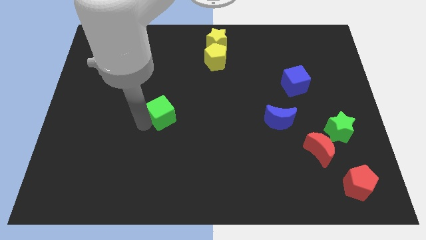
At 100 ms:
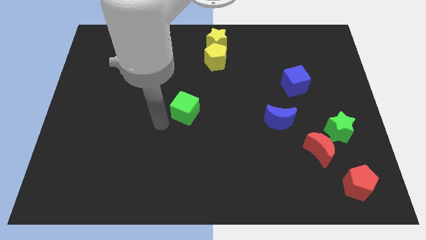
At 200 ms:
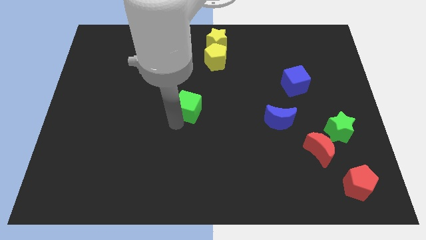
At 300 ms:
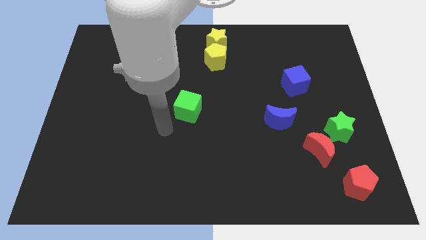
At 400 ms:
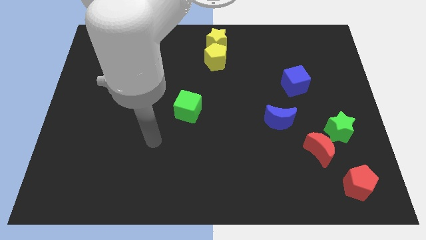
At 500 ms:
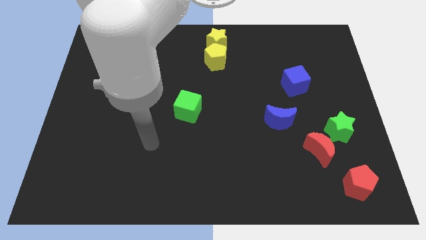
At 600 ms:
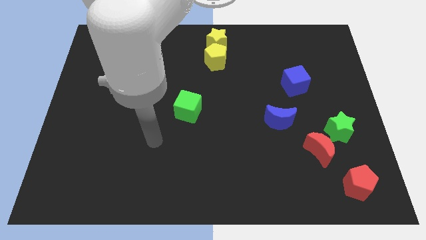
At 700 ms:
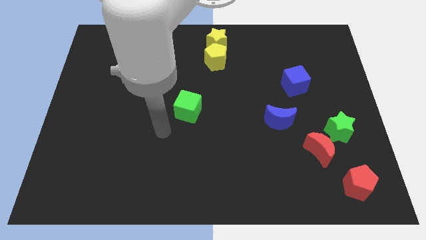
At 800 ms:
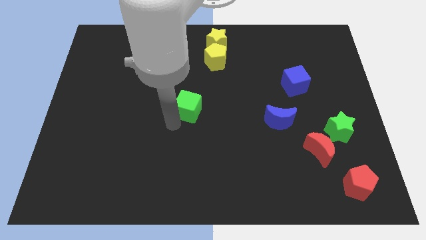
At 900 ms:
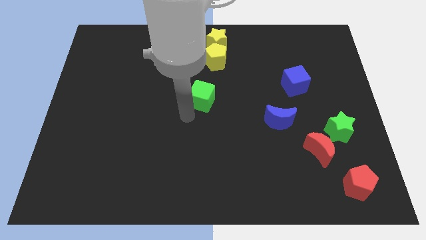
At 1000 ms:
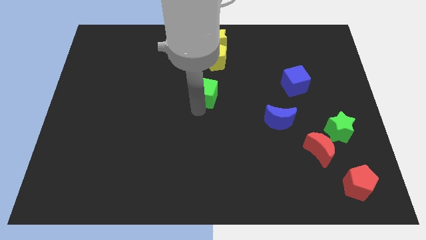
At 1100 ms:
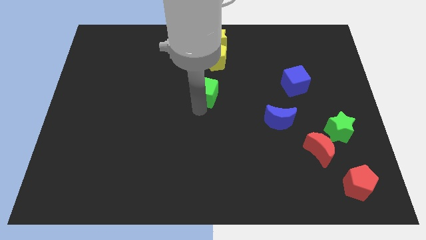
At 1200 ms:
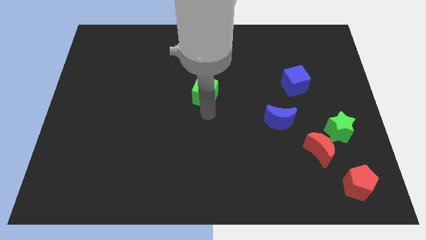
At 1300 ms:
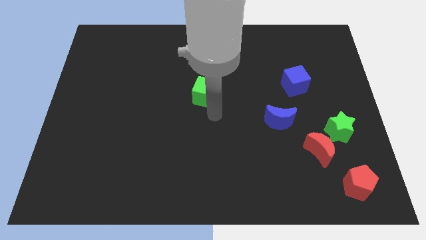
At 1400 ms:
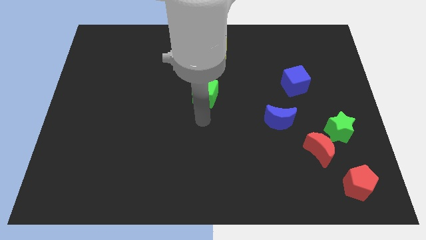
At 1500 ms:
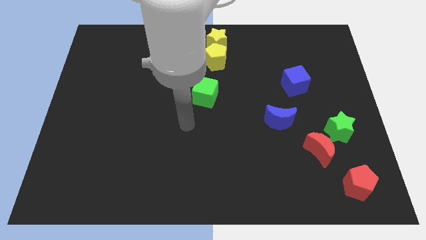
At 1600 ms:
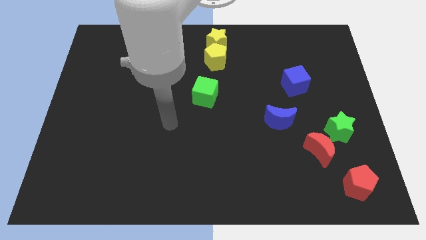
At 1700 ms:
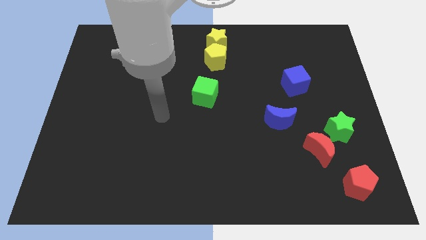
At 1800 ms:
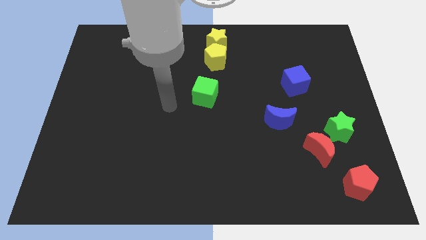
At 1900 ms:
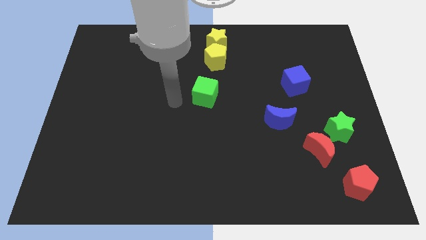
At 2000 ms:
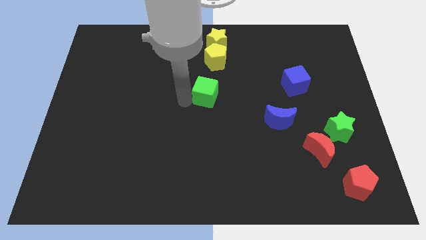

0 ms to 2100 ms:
place the green cube left to the blue cube

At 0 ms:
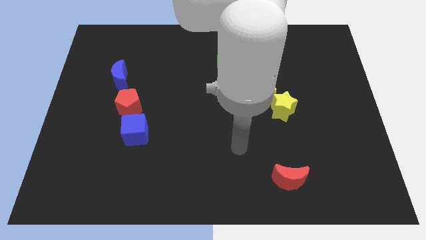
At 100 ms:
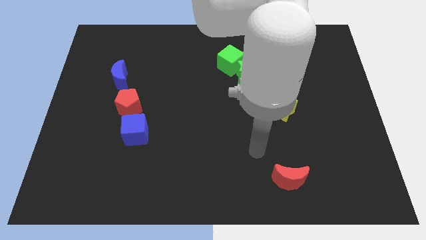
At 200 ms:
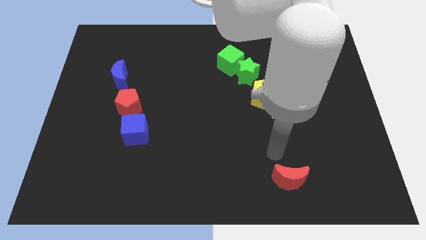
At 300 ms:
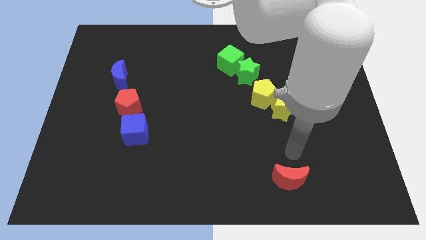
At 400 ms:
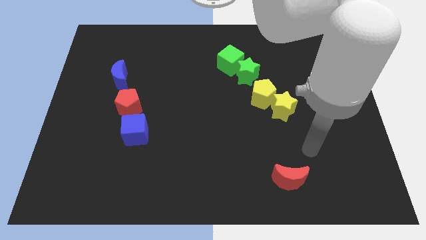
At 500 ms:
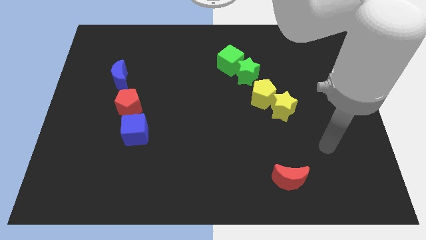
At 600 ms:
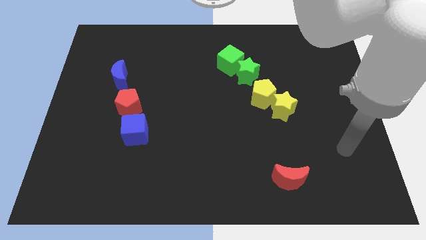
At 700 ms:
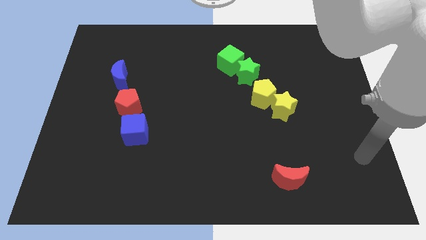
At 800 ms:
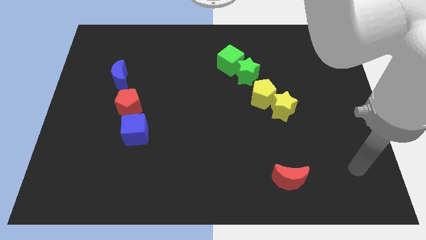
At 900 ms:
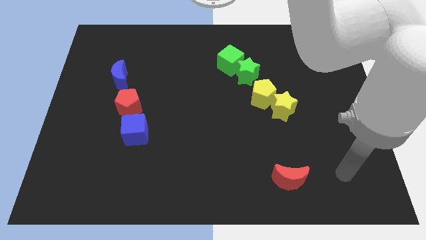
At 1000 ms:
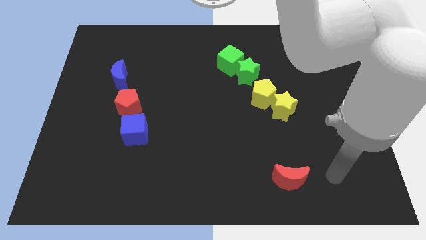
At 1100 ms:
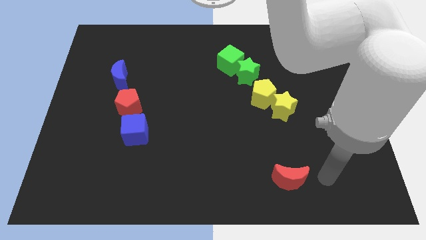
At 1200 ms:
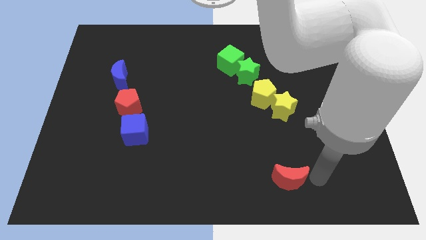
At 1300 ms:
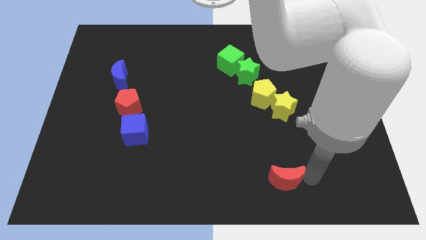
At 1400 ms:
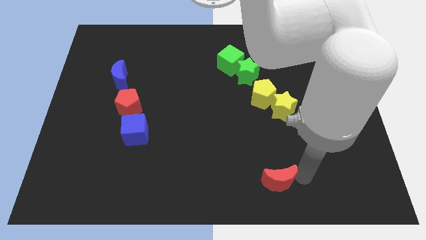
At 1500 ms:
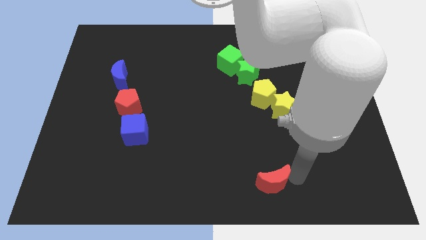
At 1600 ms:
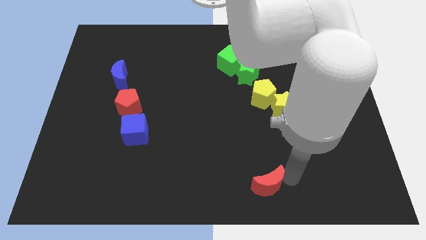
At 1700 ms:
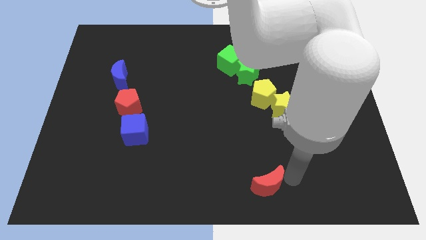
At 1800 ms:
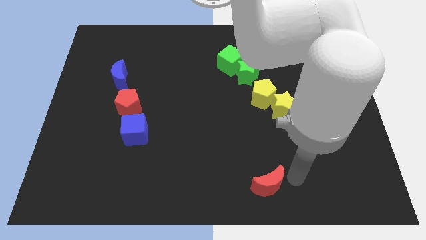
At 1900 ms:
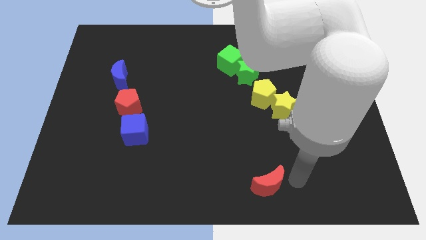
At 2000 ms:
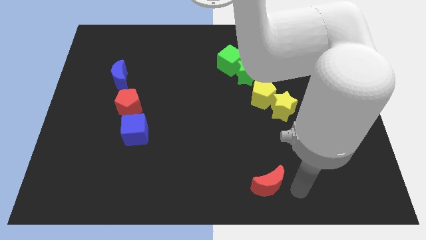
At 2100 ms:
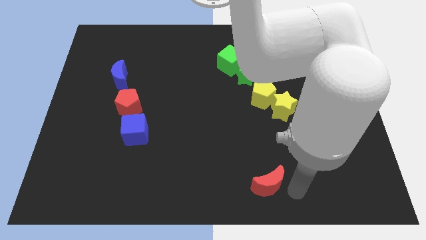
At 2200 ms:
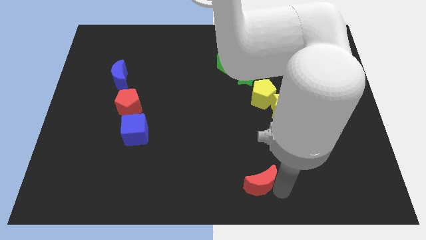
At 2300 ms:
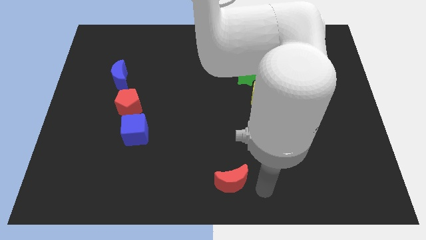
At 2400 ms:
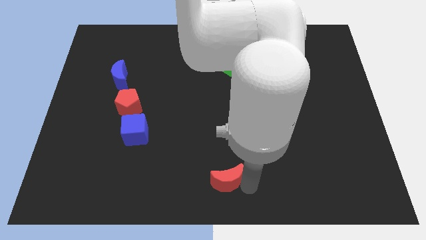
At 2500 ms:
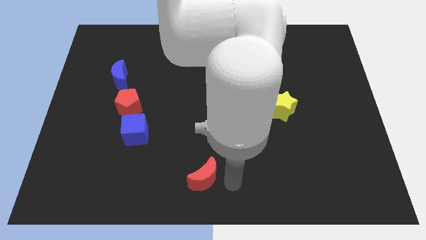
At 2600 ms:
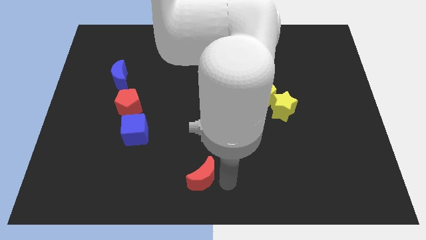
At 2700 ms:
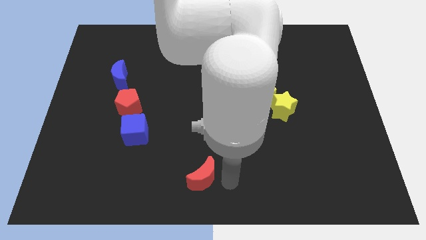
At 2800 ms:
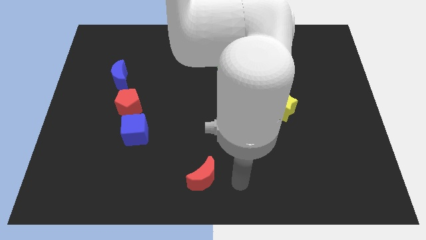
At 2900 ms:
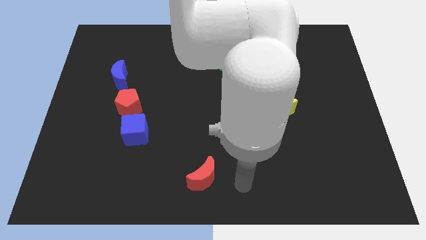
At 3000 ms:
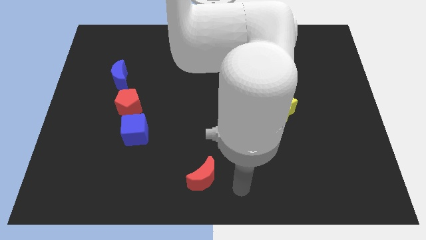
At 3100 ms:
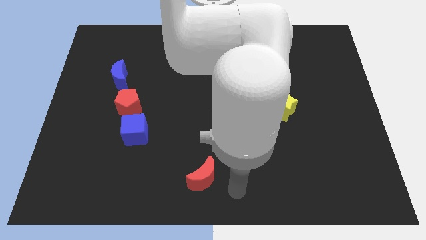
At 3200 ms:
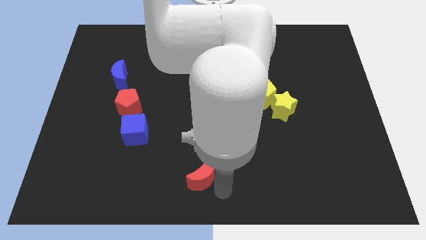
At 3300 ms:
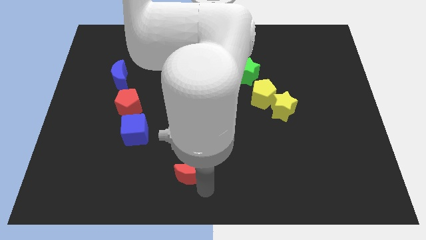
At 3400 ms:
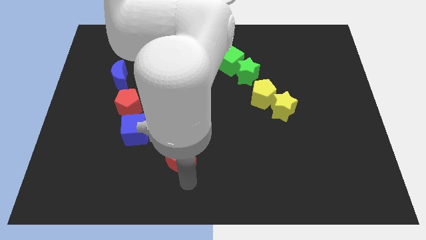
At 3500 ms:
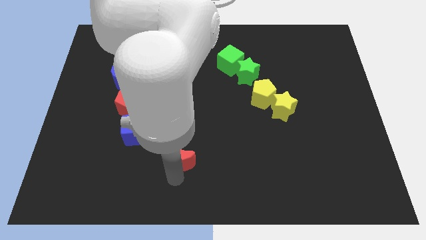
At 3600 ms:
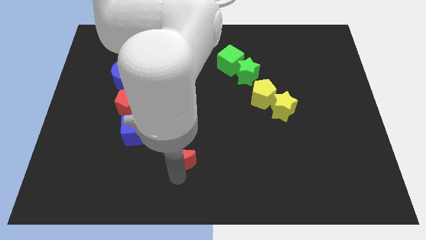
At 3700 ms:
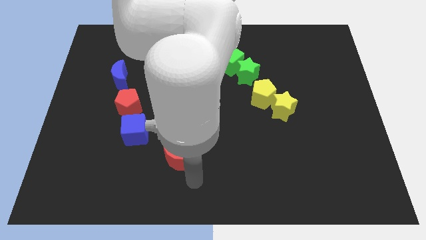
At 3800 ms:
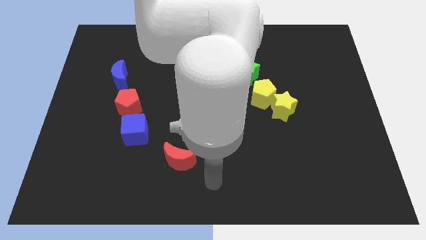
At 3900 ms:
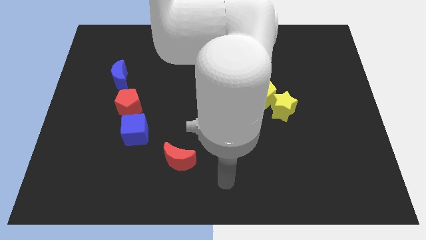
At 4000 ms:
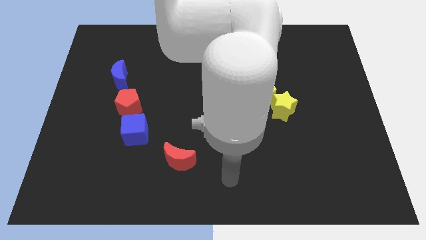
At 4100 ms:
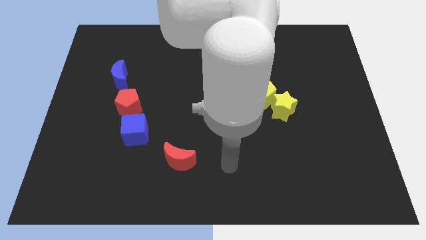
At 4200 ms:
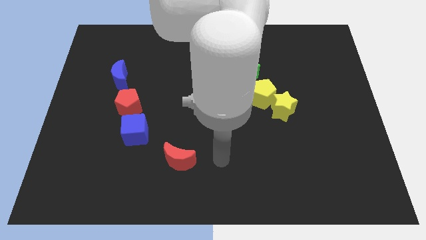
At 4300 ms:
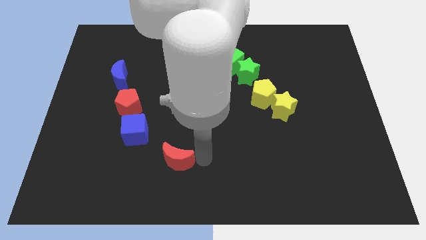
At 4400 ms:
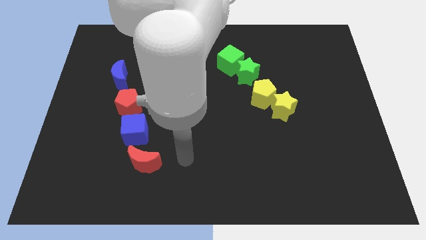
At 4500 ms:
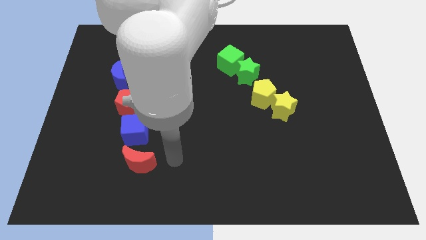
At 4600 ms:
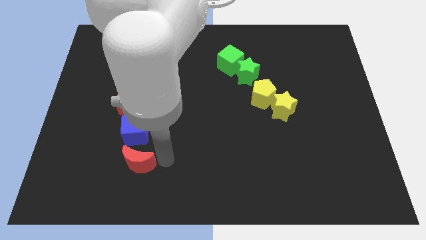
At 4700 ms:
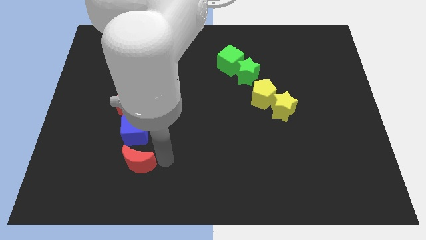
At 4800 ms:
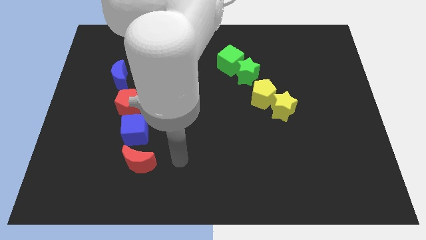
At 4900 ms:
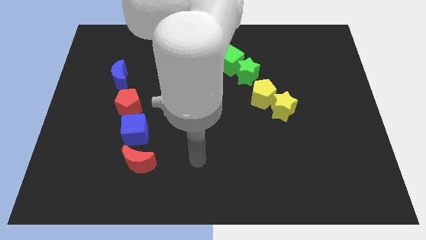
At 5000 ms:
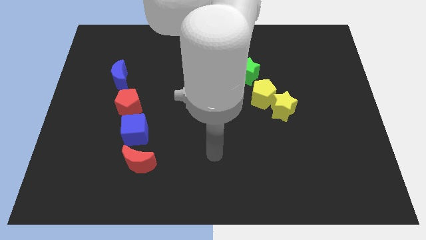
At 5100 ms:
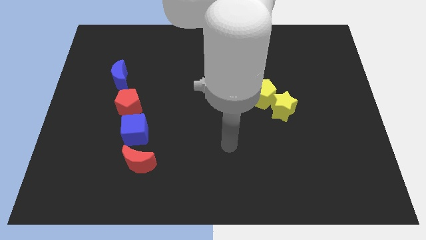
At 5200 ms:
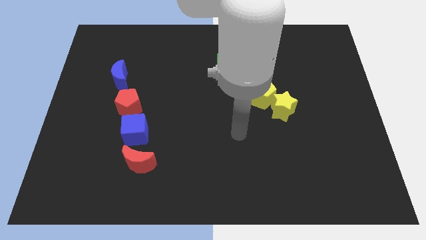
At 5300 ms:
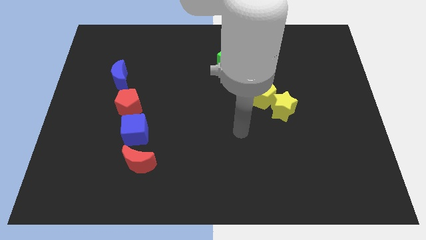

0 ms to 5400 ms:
move the red moon below the blue cube

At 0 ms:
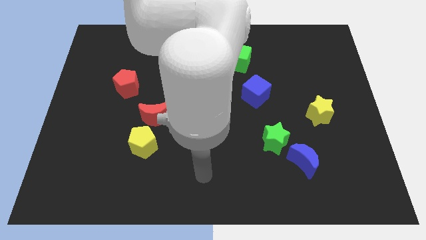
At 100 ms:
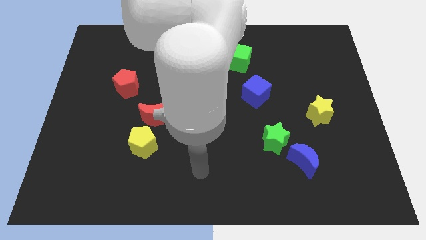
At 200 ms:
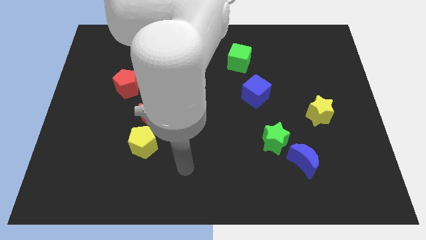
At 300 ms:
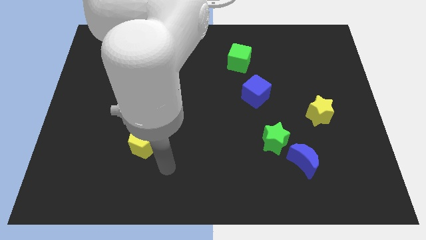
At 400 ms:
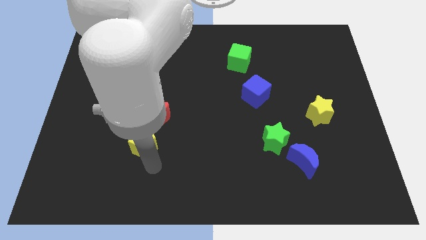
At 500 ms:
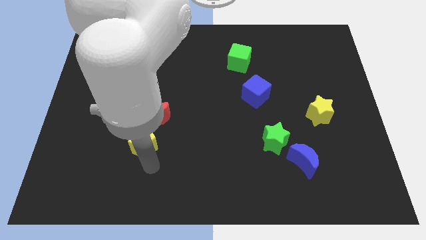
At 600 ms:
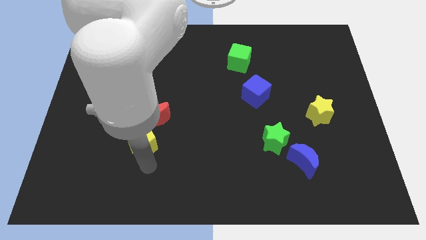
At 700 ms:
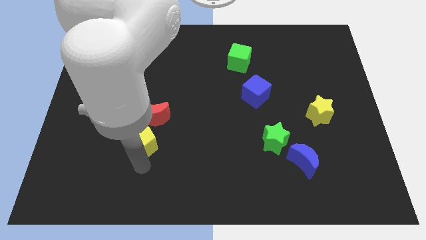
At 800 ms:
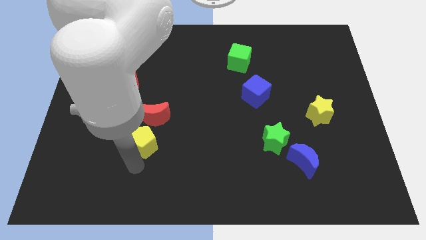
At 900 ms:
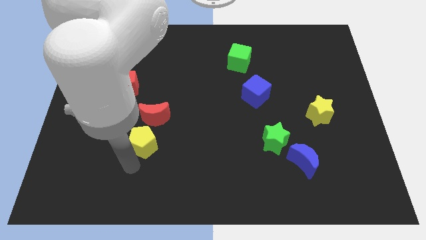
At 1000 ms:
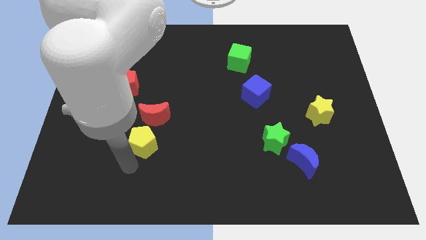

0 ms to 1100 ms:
point your arm at the bottom of the yellow pentagon

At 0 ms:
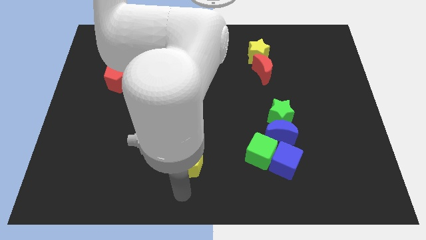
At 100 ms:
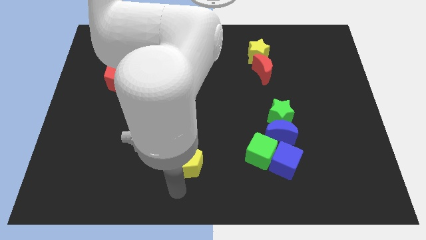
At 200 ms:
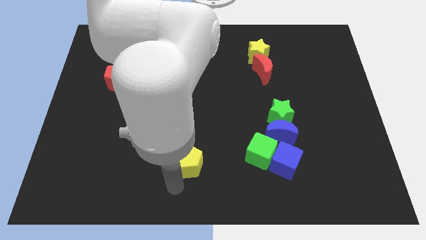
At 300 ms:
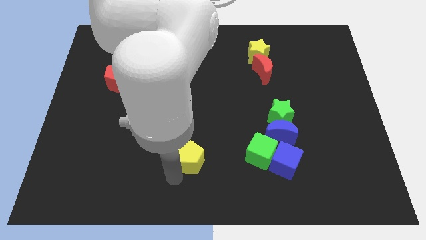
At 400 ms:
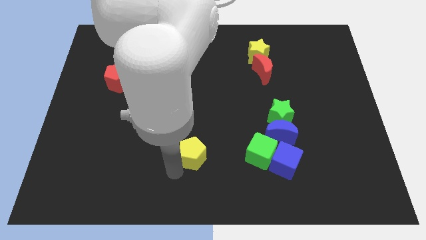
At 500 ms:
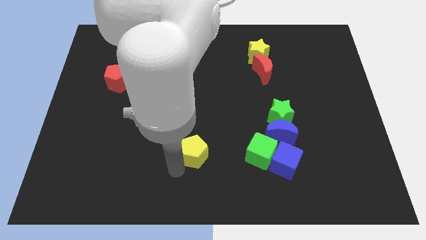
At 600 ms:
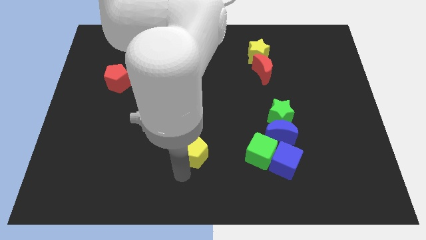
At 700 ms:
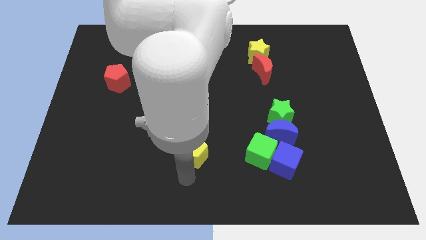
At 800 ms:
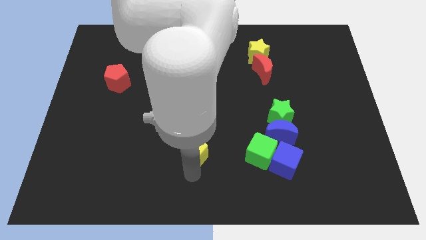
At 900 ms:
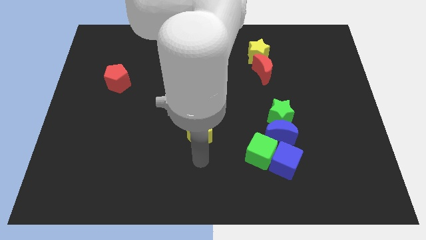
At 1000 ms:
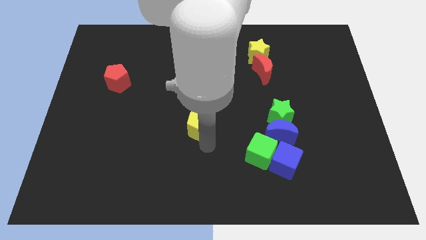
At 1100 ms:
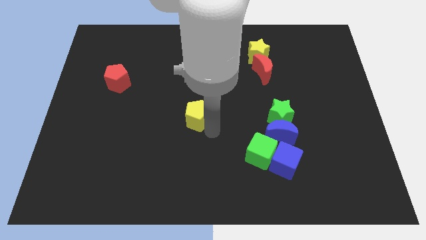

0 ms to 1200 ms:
push the yellow pentagon to the center of the board
